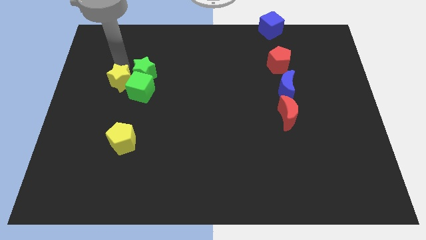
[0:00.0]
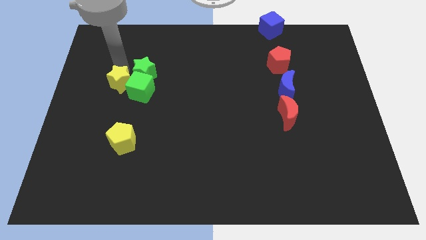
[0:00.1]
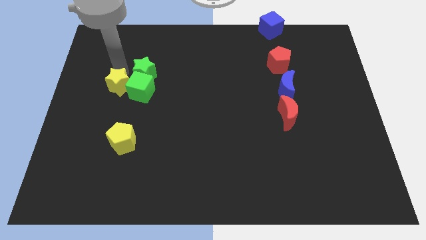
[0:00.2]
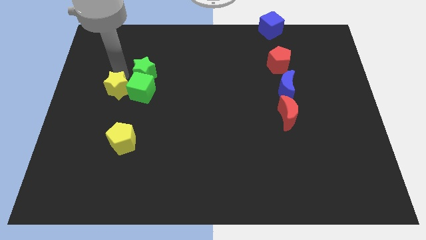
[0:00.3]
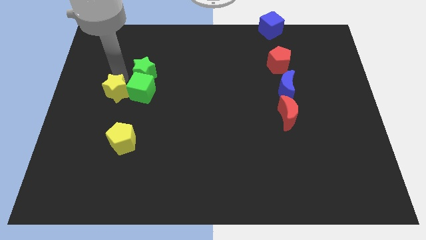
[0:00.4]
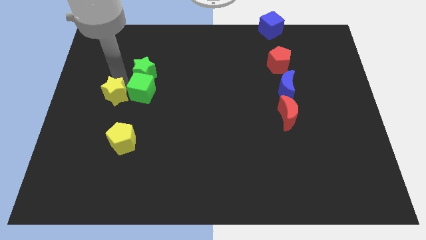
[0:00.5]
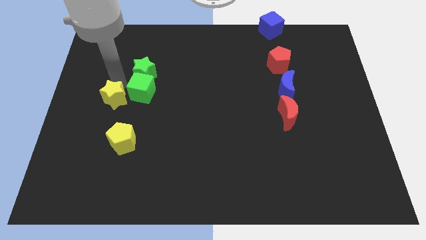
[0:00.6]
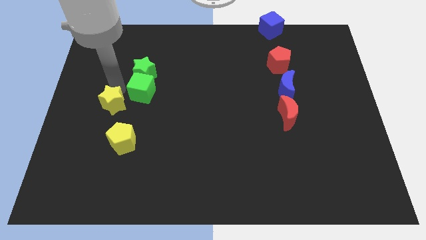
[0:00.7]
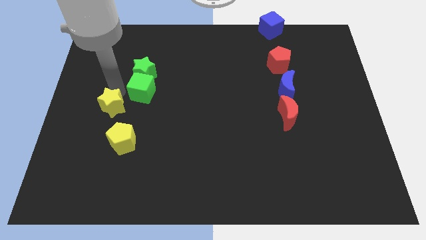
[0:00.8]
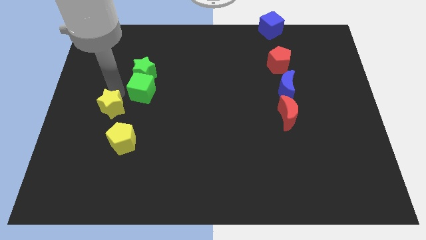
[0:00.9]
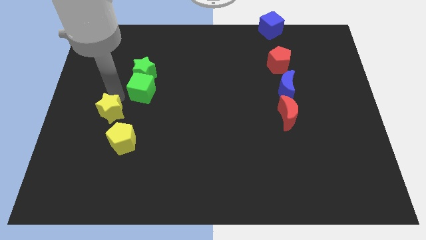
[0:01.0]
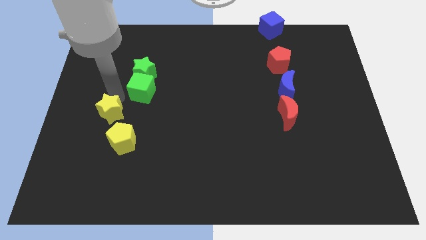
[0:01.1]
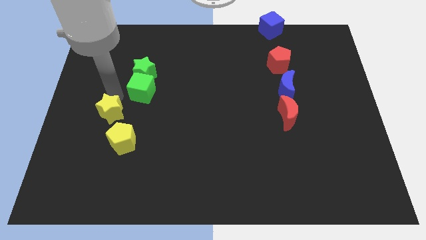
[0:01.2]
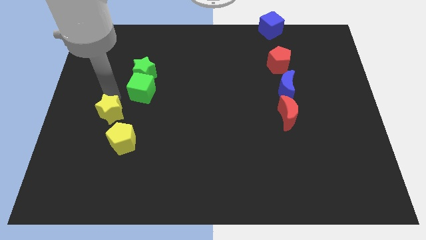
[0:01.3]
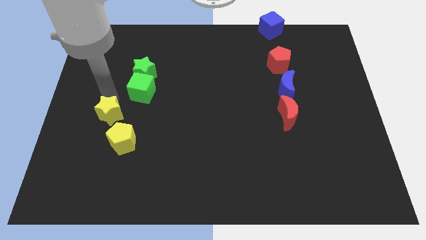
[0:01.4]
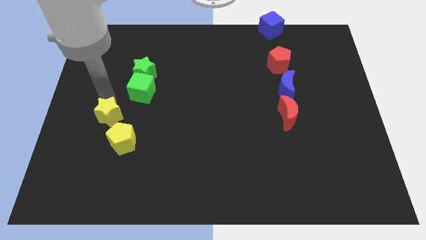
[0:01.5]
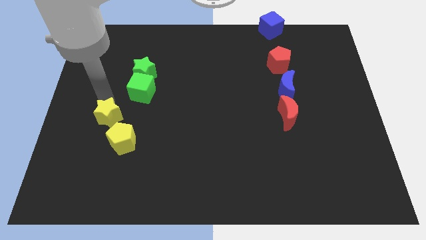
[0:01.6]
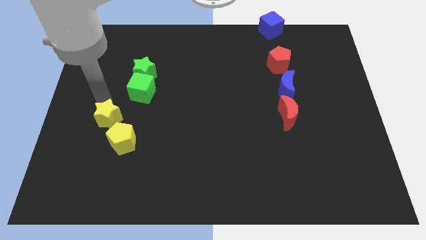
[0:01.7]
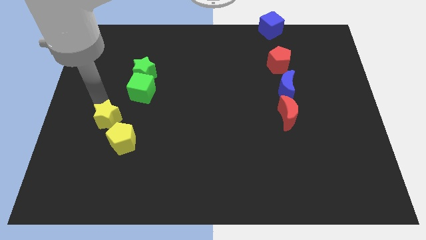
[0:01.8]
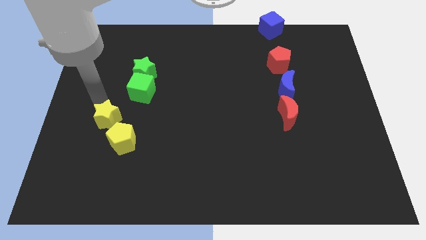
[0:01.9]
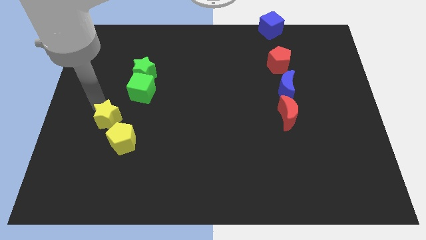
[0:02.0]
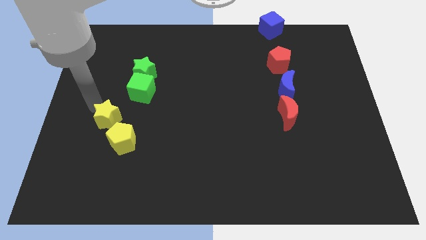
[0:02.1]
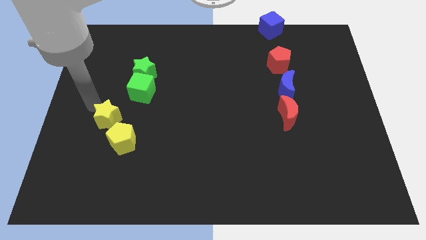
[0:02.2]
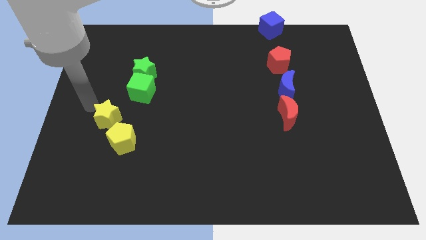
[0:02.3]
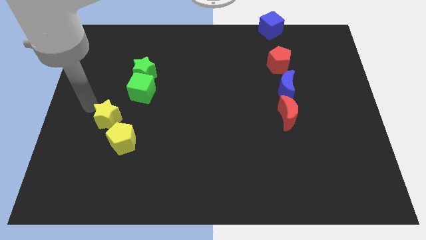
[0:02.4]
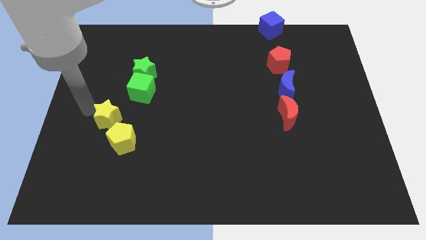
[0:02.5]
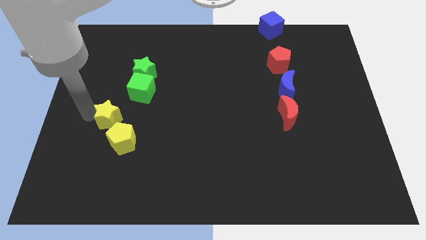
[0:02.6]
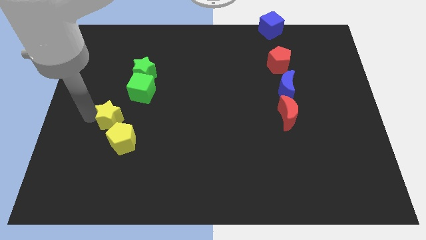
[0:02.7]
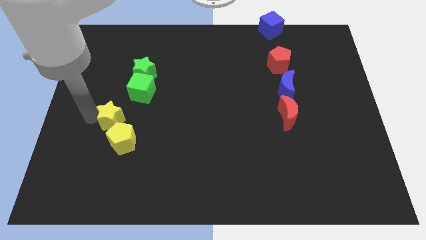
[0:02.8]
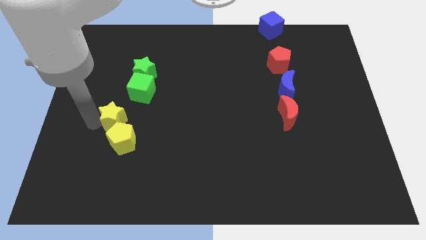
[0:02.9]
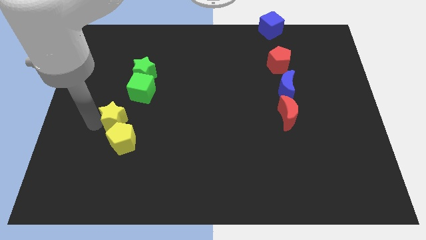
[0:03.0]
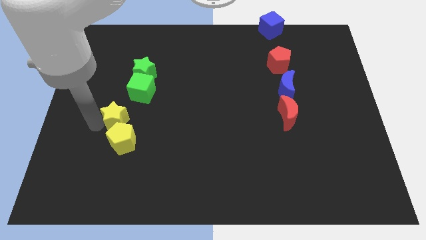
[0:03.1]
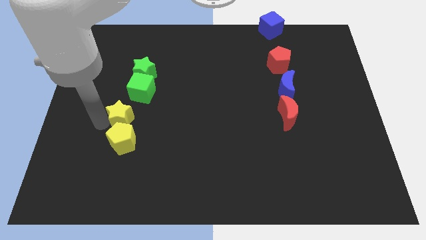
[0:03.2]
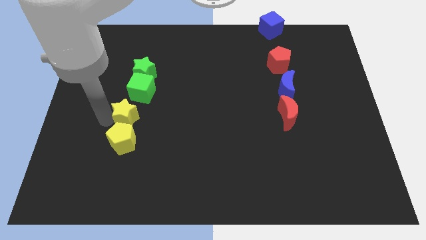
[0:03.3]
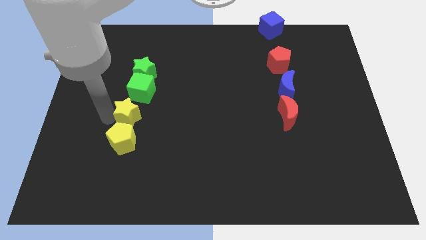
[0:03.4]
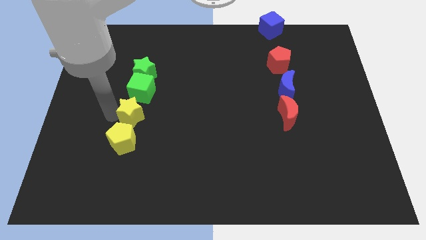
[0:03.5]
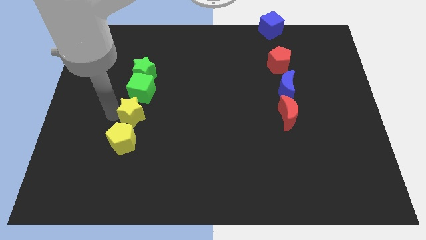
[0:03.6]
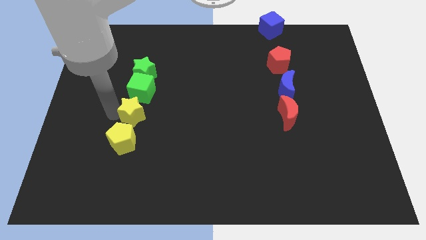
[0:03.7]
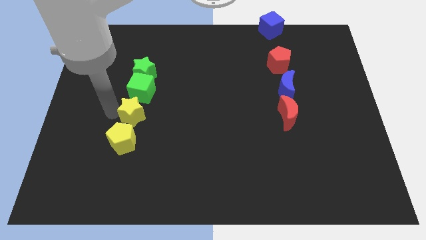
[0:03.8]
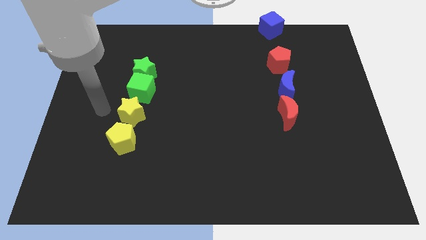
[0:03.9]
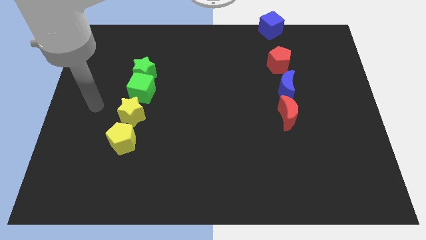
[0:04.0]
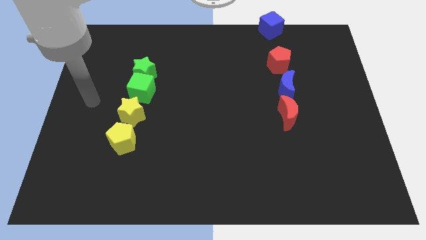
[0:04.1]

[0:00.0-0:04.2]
place yellow star in between green cube and yellow pentagon

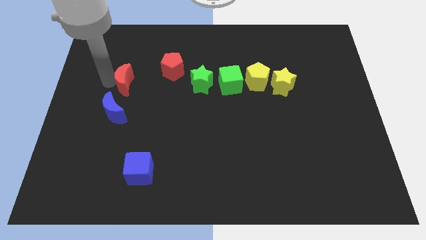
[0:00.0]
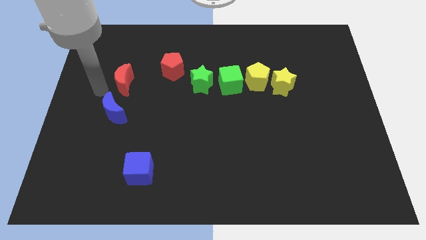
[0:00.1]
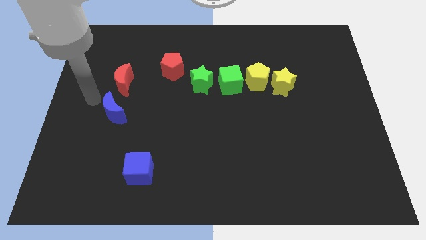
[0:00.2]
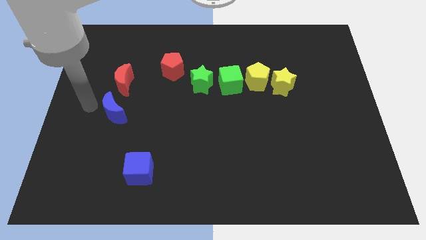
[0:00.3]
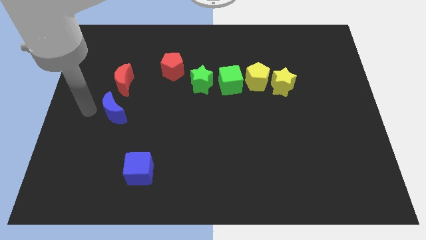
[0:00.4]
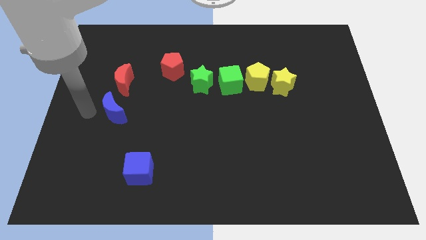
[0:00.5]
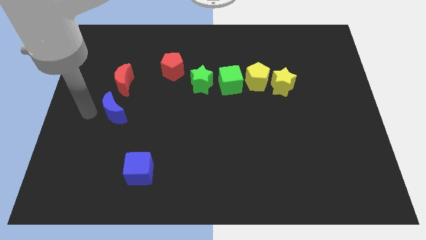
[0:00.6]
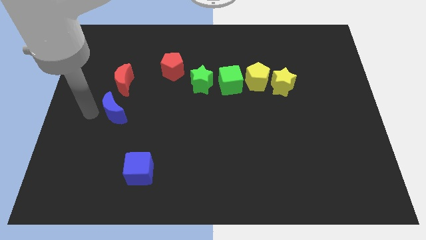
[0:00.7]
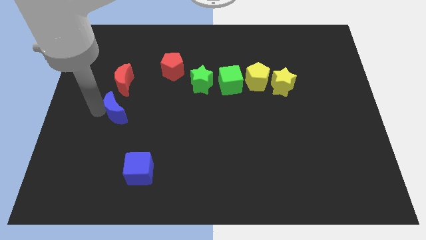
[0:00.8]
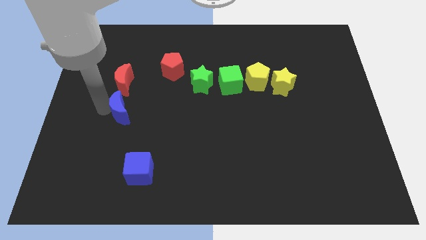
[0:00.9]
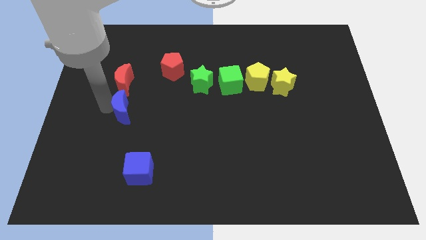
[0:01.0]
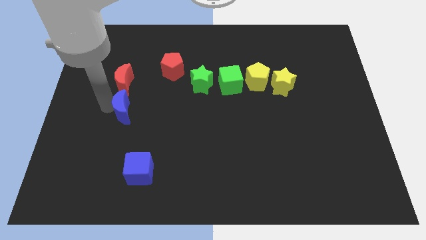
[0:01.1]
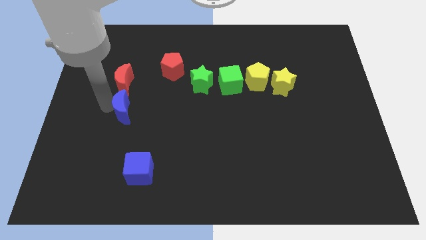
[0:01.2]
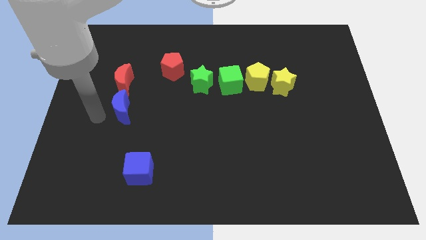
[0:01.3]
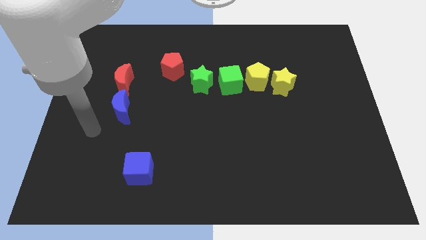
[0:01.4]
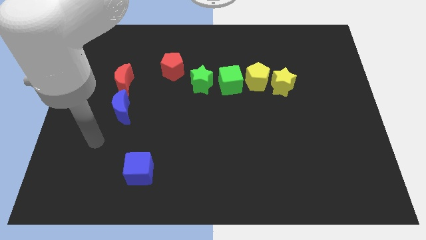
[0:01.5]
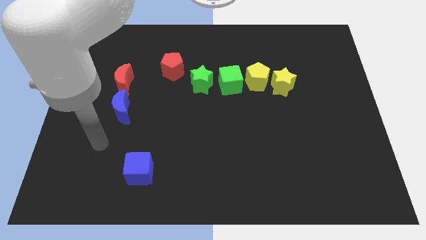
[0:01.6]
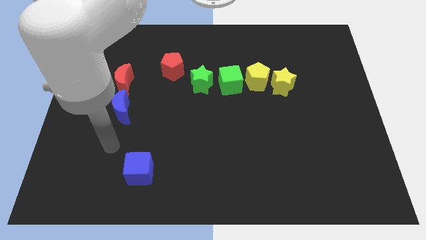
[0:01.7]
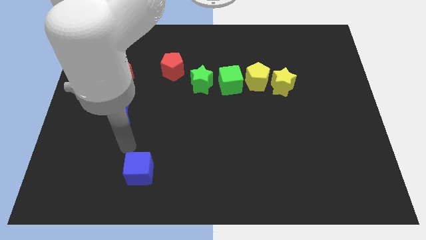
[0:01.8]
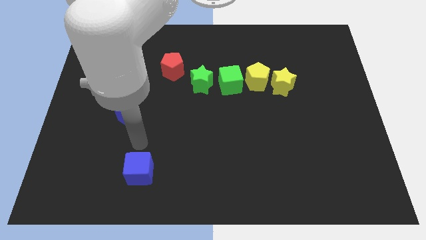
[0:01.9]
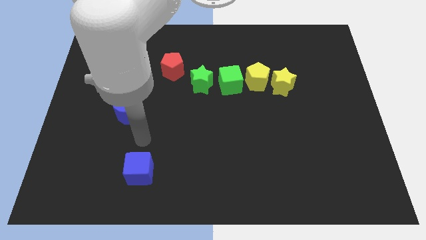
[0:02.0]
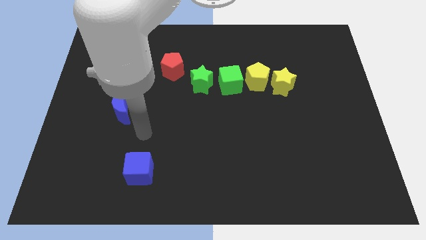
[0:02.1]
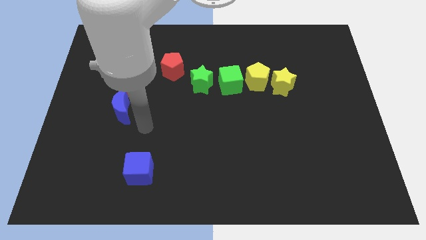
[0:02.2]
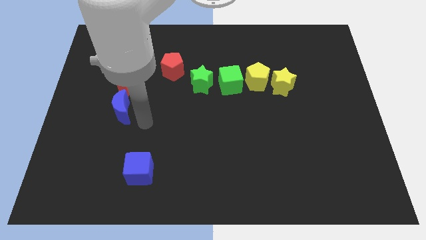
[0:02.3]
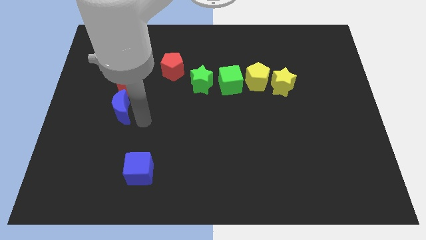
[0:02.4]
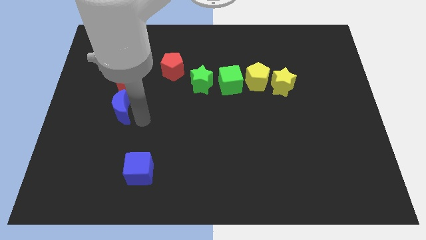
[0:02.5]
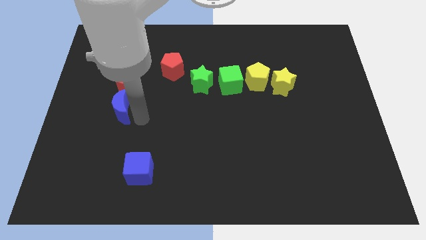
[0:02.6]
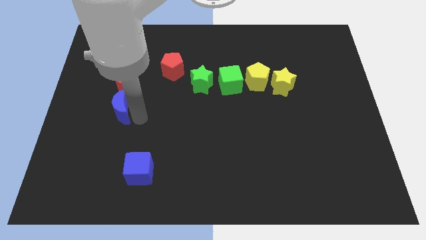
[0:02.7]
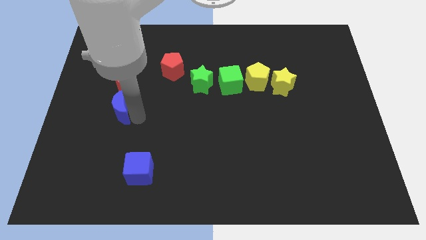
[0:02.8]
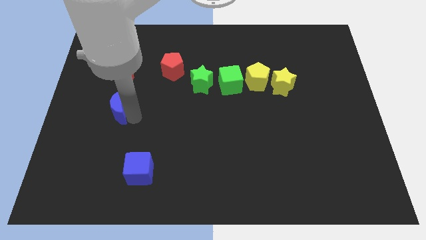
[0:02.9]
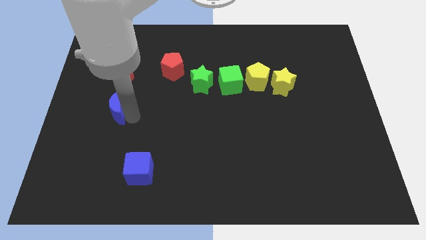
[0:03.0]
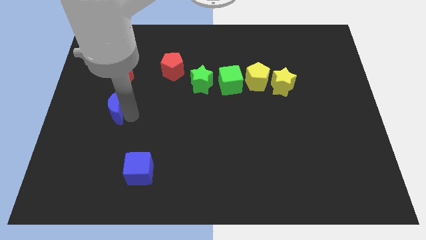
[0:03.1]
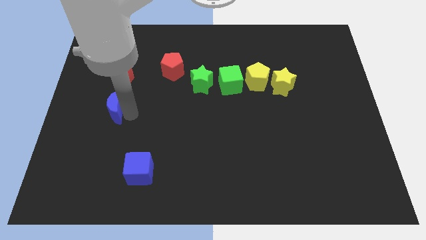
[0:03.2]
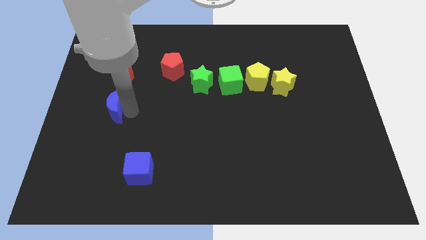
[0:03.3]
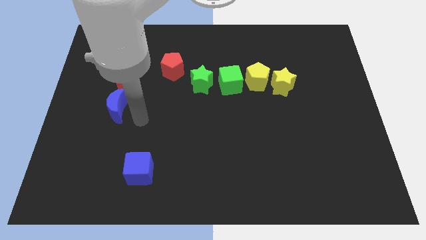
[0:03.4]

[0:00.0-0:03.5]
move the blue crescent to the bottom of the red crescent

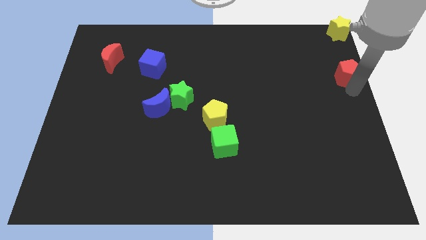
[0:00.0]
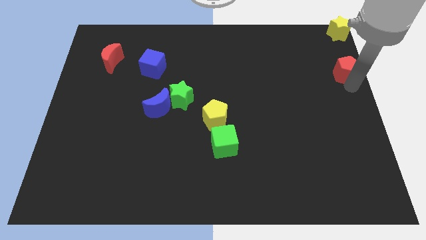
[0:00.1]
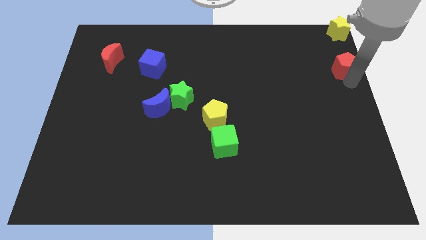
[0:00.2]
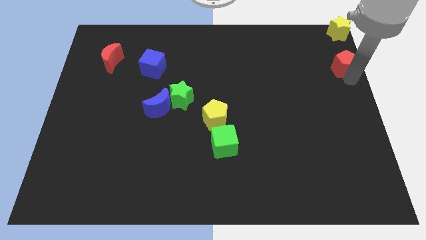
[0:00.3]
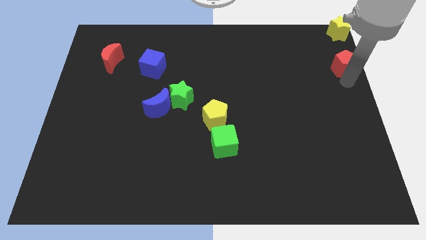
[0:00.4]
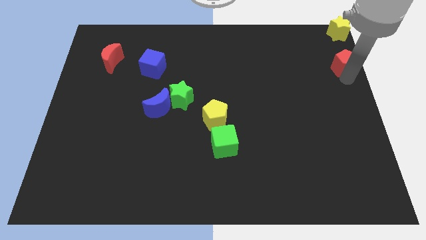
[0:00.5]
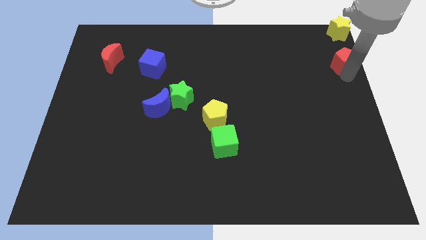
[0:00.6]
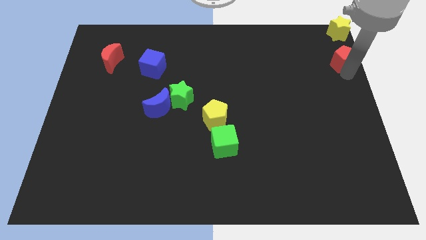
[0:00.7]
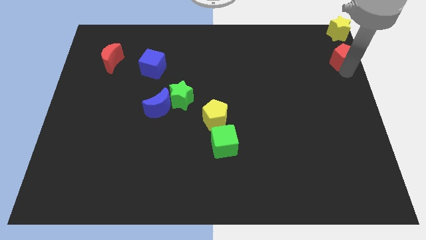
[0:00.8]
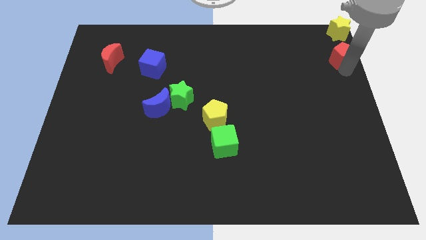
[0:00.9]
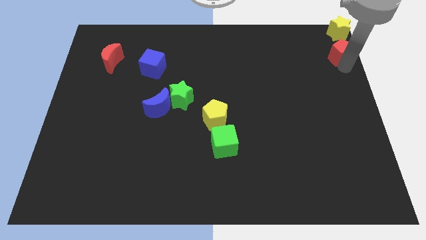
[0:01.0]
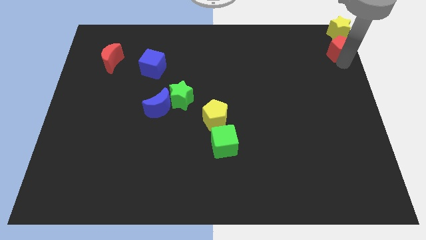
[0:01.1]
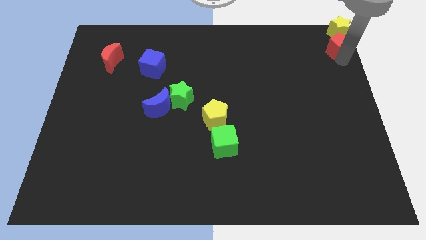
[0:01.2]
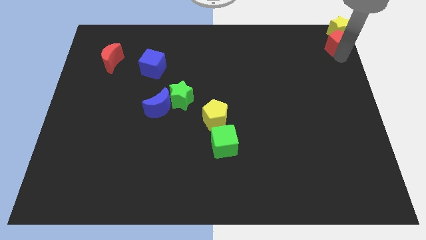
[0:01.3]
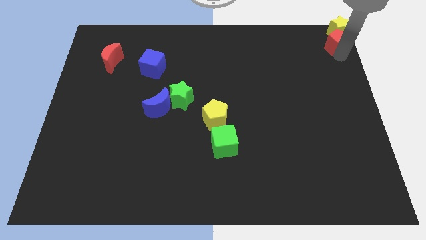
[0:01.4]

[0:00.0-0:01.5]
push the red pentagon into the yellow star
